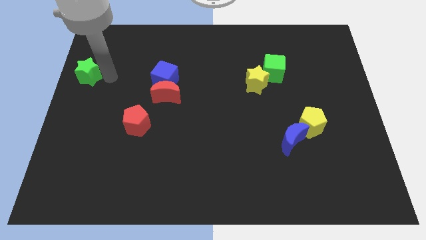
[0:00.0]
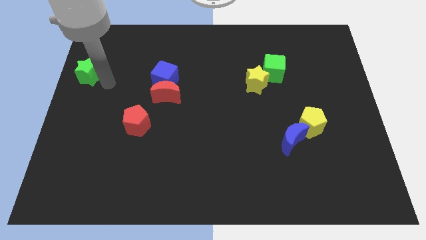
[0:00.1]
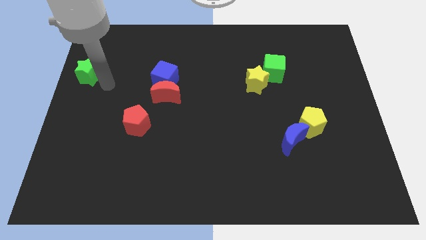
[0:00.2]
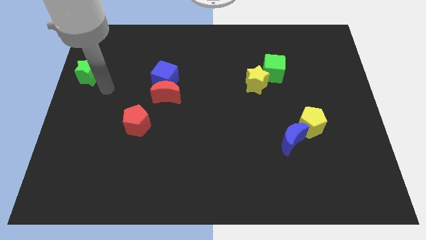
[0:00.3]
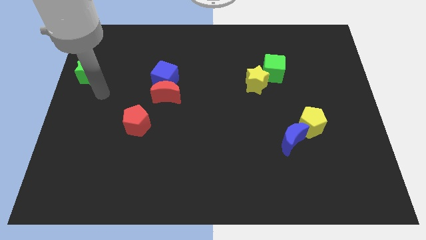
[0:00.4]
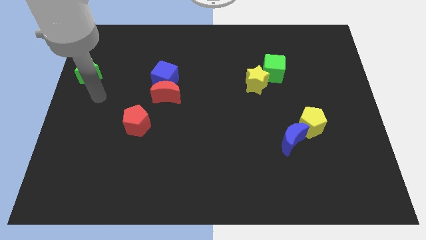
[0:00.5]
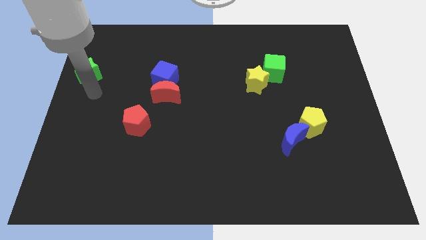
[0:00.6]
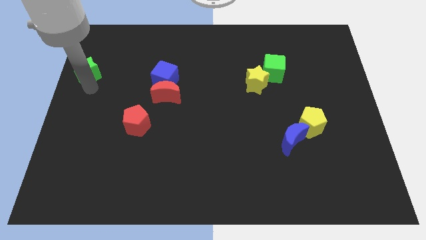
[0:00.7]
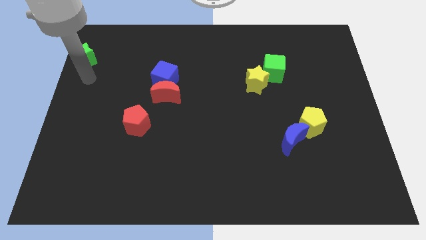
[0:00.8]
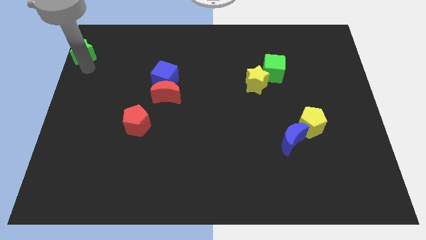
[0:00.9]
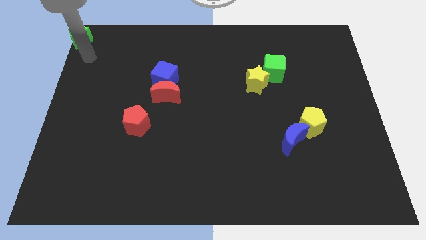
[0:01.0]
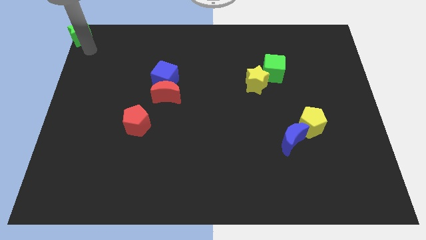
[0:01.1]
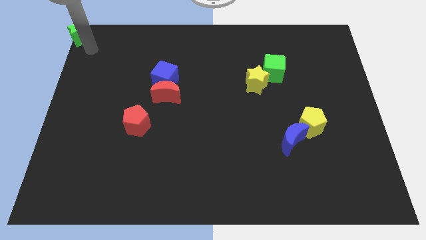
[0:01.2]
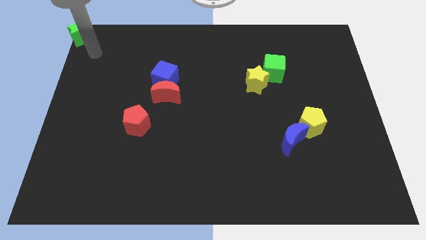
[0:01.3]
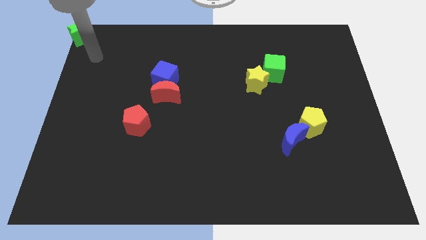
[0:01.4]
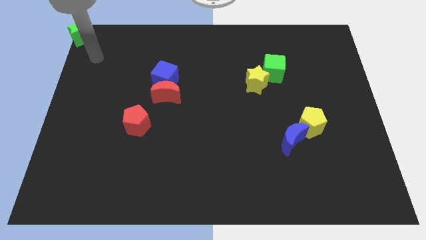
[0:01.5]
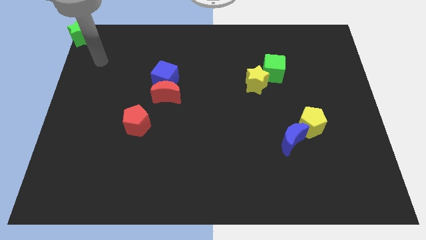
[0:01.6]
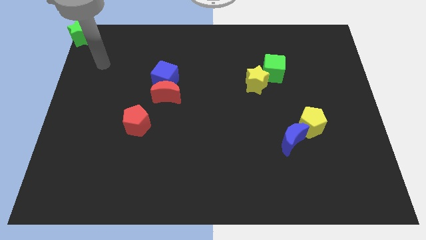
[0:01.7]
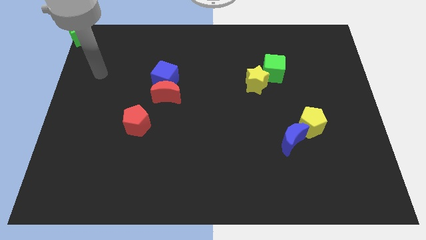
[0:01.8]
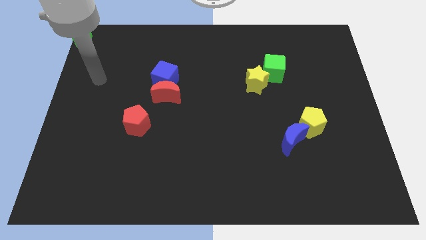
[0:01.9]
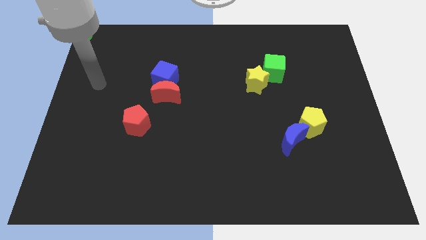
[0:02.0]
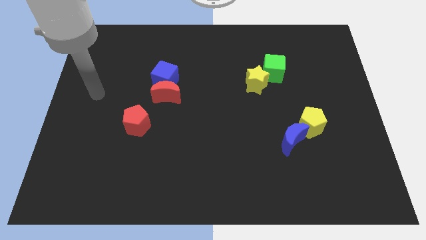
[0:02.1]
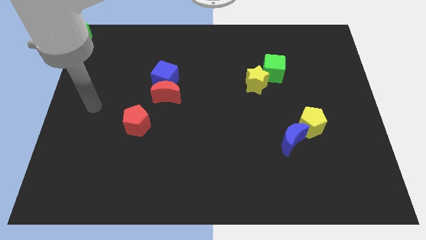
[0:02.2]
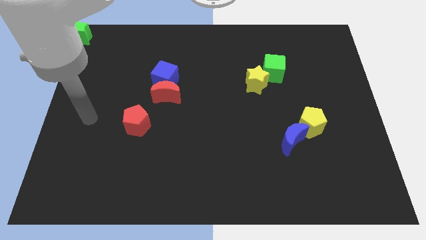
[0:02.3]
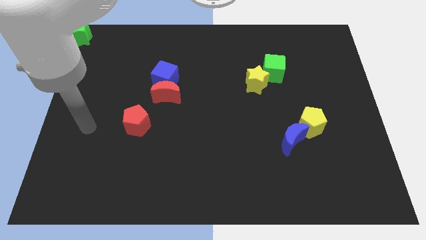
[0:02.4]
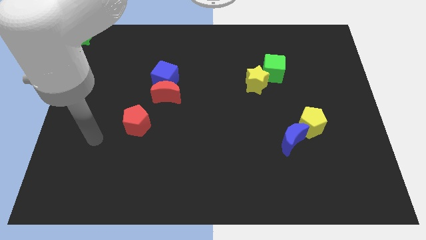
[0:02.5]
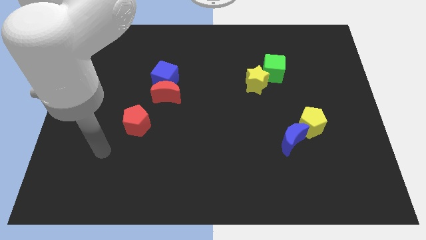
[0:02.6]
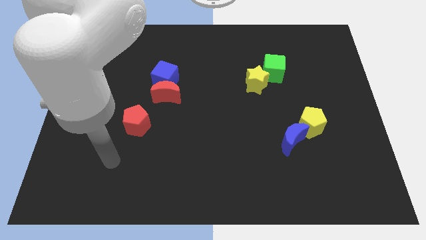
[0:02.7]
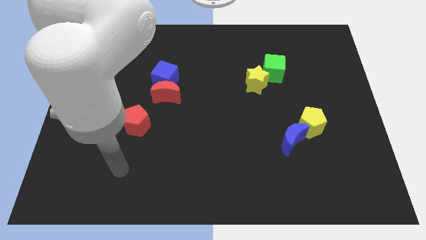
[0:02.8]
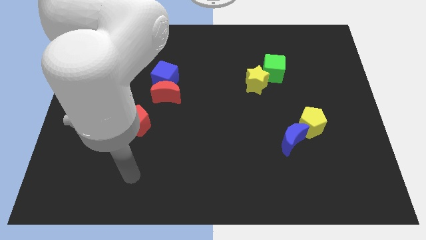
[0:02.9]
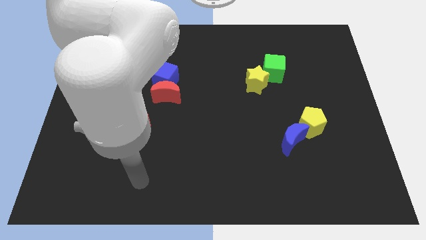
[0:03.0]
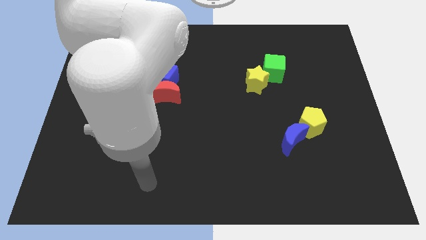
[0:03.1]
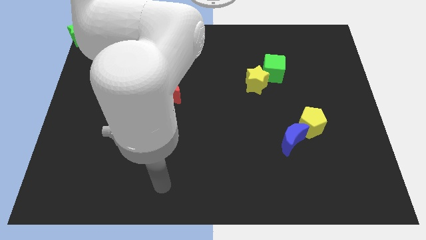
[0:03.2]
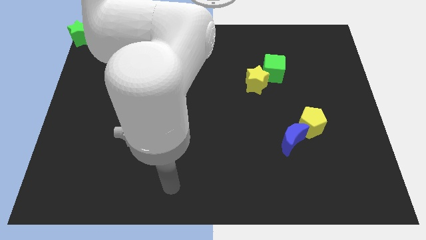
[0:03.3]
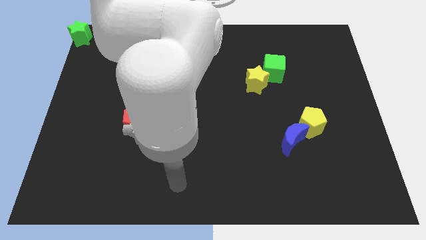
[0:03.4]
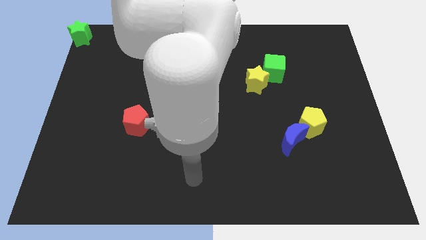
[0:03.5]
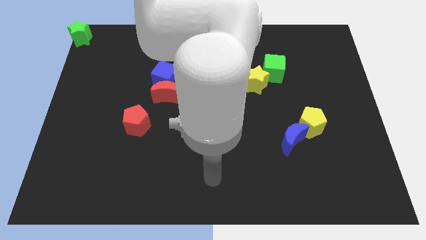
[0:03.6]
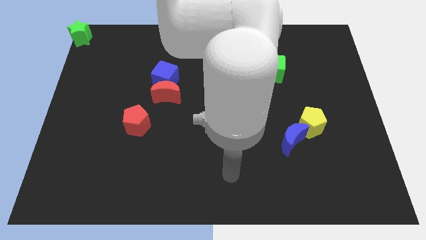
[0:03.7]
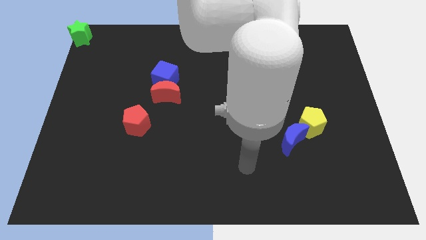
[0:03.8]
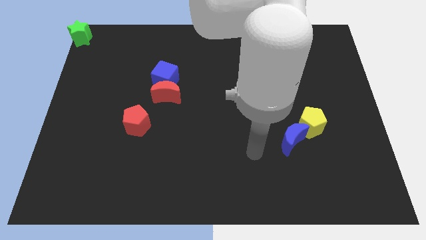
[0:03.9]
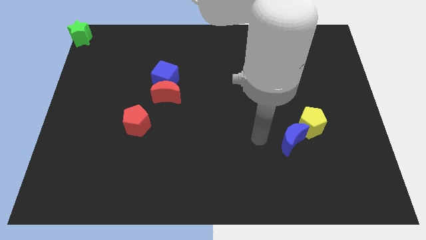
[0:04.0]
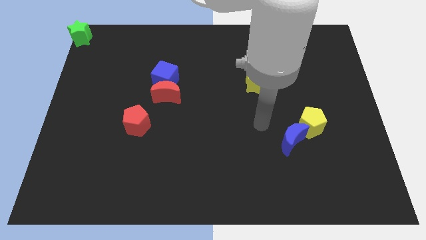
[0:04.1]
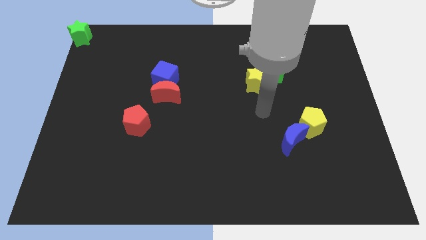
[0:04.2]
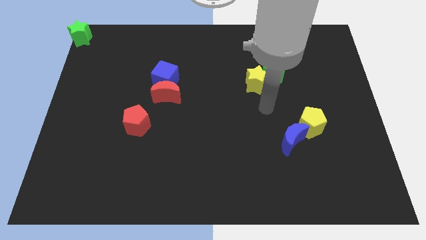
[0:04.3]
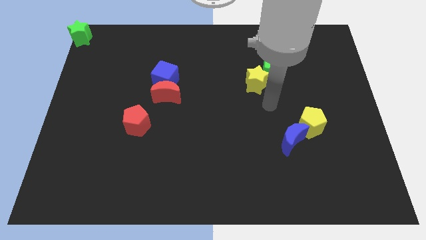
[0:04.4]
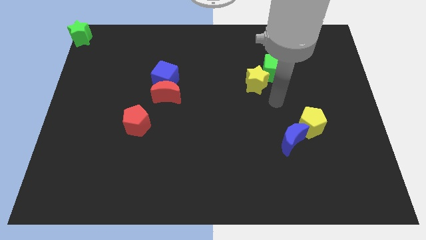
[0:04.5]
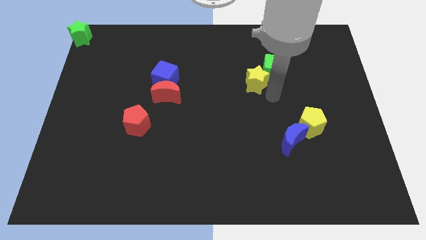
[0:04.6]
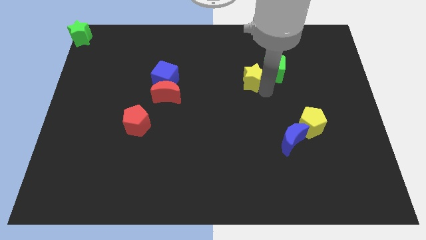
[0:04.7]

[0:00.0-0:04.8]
place the arm diagonal to the yellow star

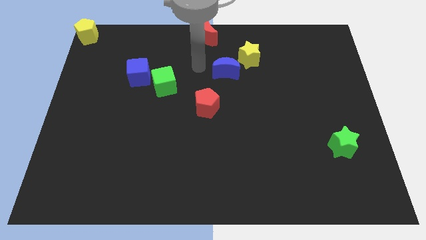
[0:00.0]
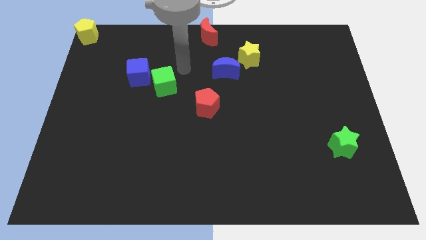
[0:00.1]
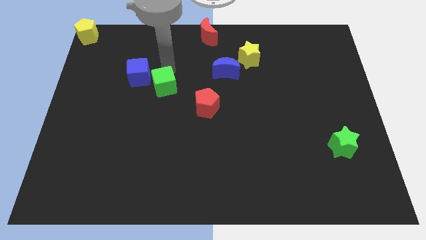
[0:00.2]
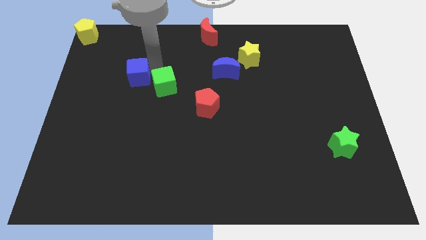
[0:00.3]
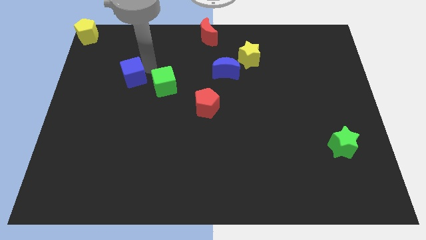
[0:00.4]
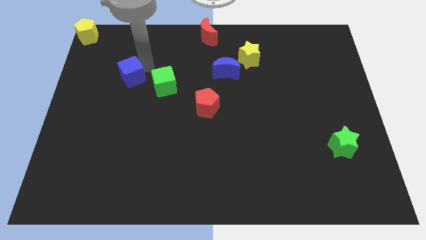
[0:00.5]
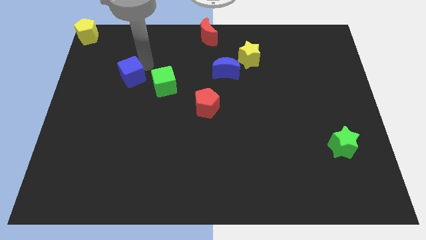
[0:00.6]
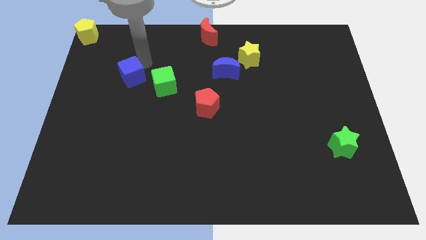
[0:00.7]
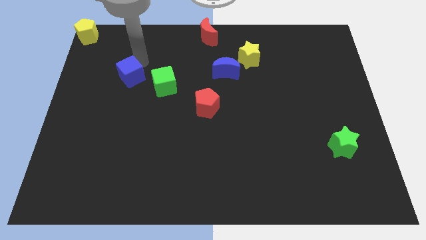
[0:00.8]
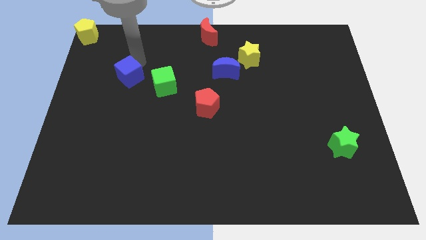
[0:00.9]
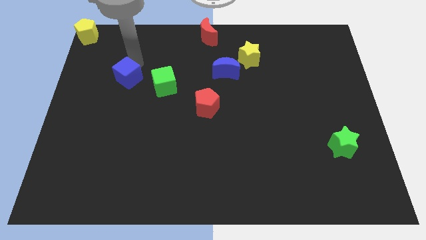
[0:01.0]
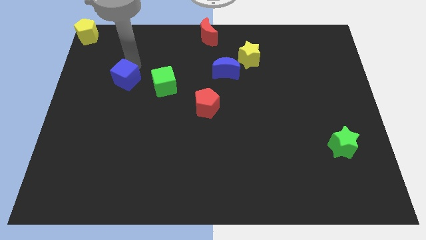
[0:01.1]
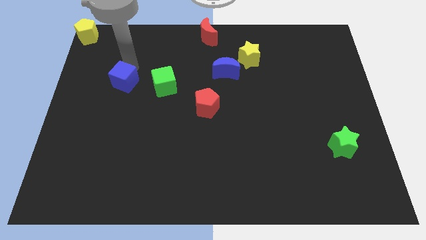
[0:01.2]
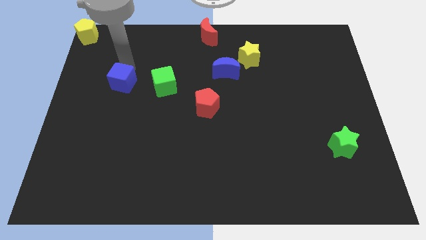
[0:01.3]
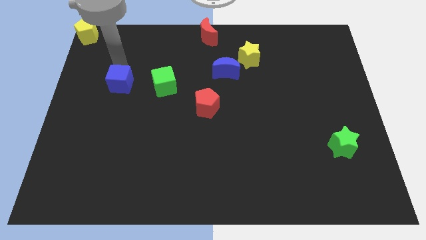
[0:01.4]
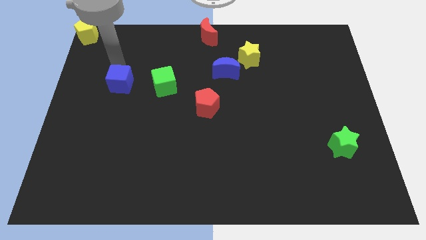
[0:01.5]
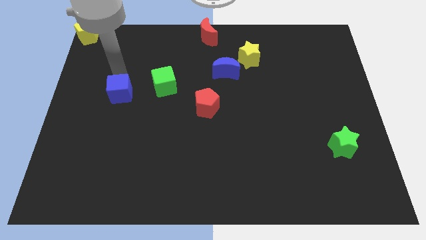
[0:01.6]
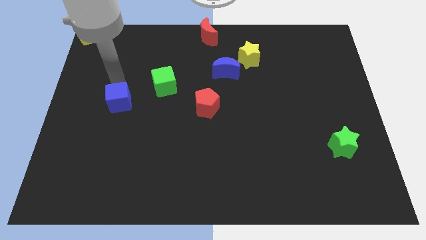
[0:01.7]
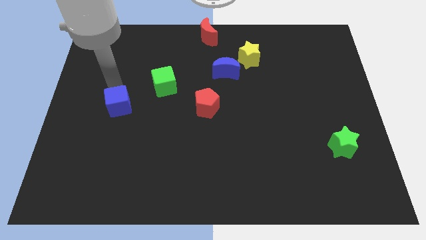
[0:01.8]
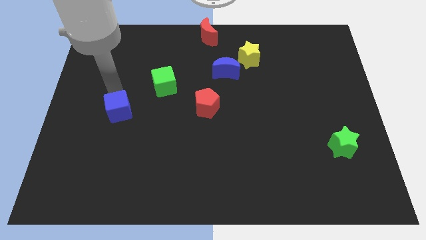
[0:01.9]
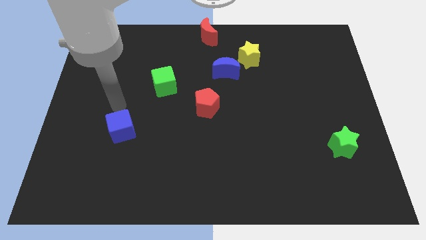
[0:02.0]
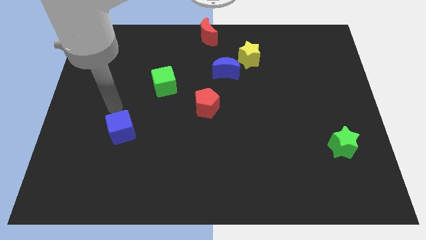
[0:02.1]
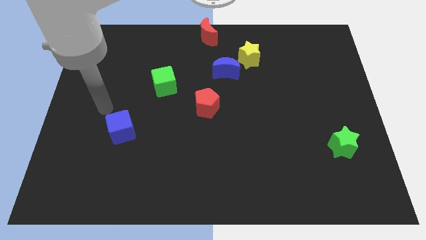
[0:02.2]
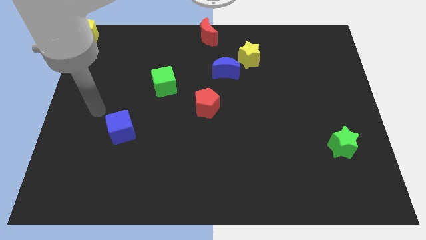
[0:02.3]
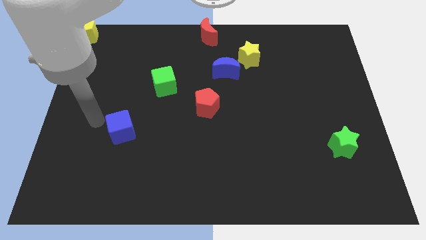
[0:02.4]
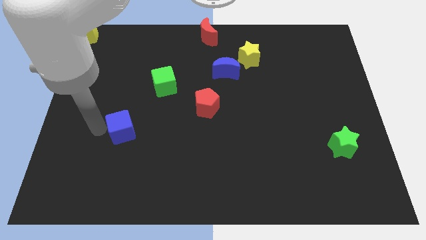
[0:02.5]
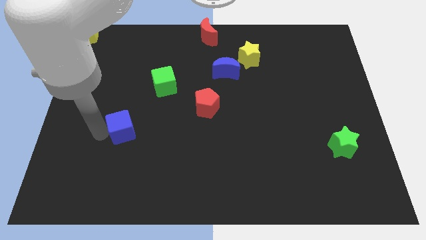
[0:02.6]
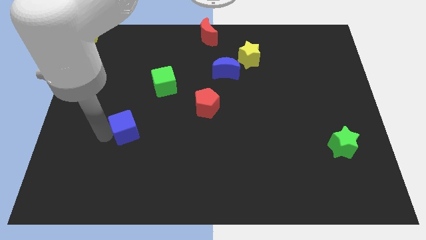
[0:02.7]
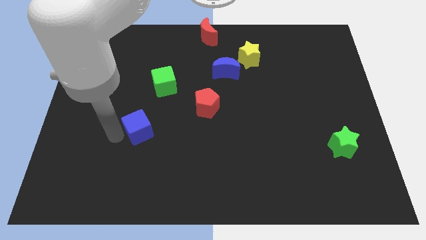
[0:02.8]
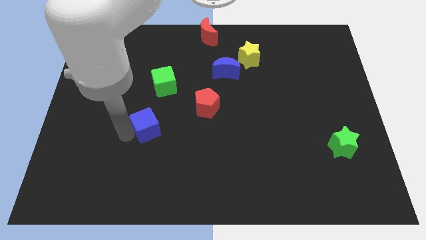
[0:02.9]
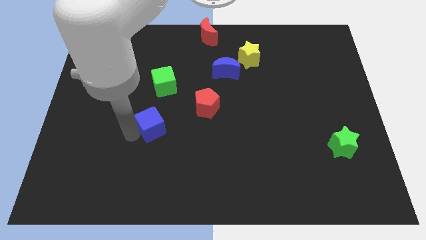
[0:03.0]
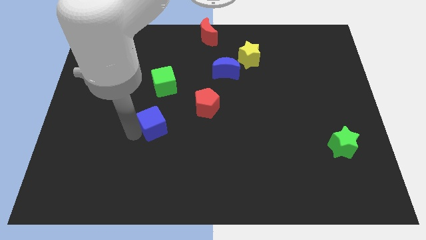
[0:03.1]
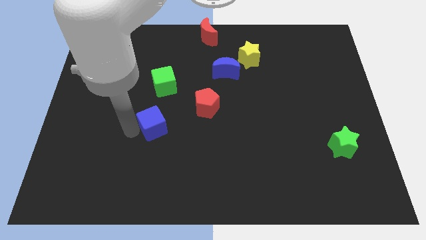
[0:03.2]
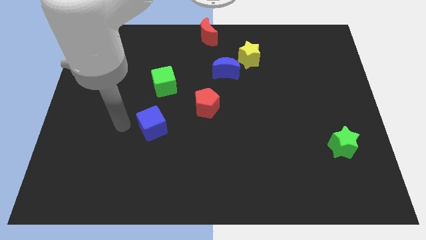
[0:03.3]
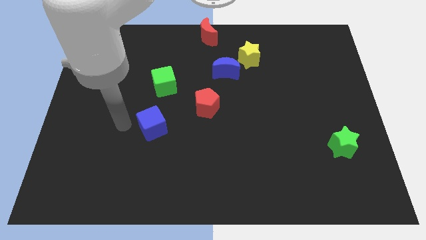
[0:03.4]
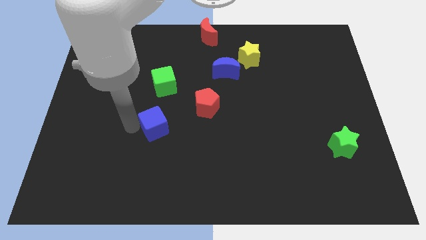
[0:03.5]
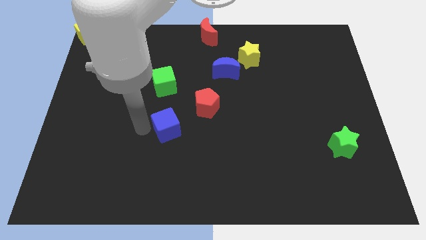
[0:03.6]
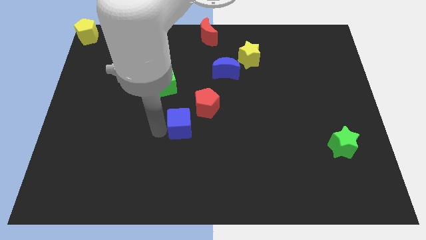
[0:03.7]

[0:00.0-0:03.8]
place the blue cube under the green cube

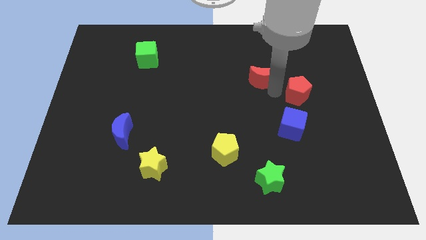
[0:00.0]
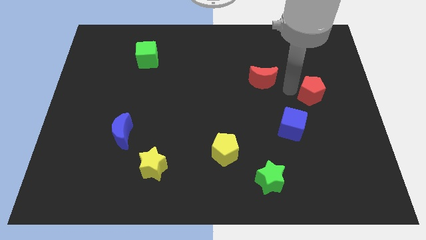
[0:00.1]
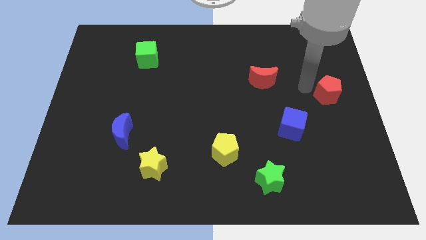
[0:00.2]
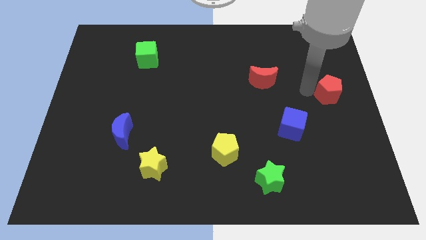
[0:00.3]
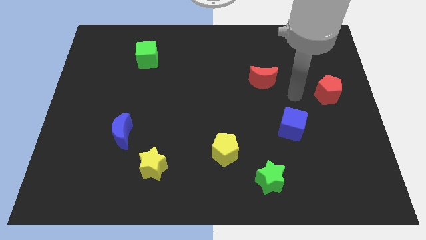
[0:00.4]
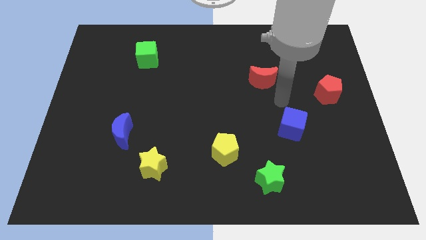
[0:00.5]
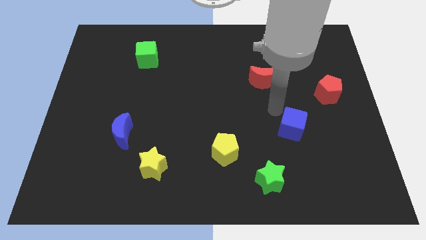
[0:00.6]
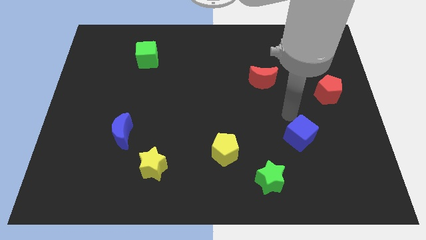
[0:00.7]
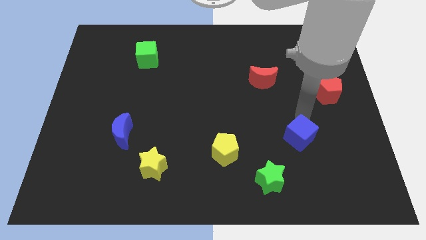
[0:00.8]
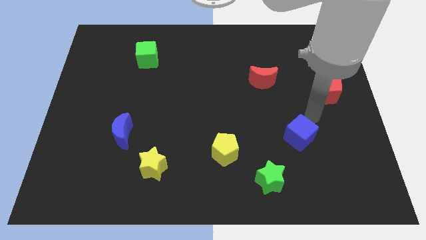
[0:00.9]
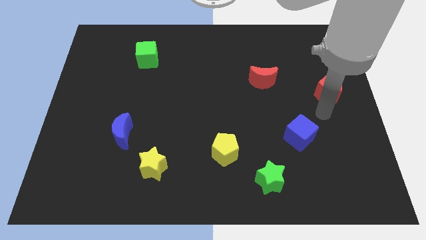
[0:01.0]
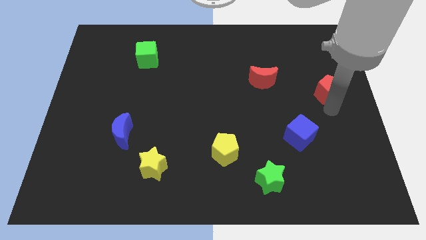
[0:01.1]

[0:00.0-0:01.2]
move the red pentagon diagonally top right to the blue cube
